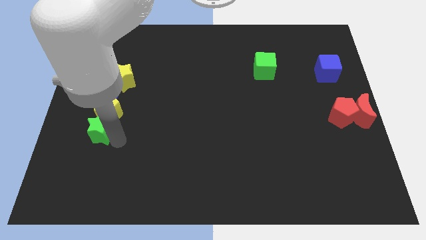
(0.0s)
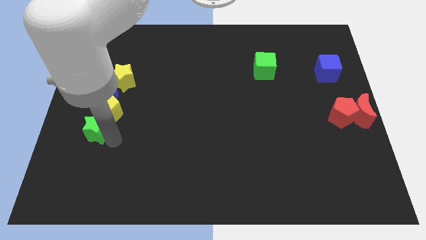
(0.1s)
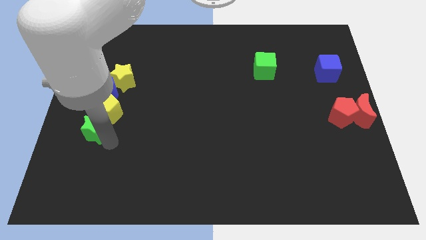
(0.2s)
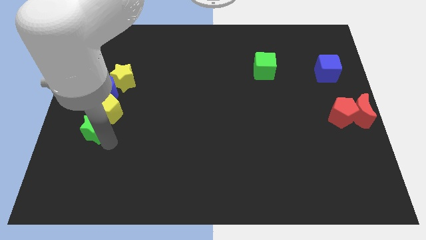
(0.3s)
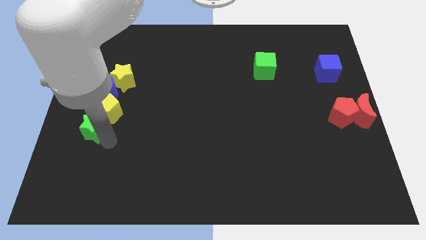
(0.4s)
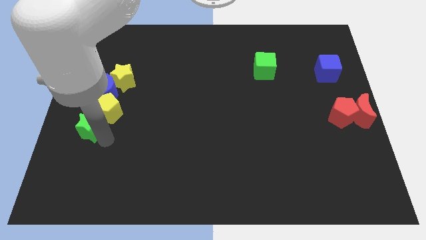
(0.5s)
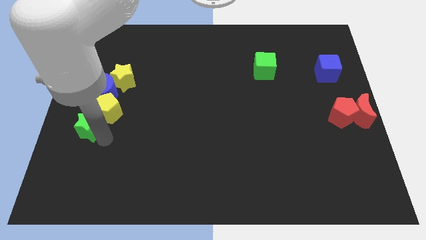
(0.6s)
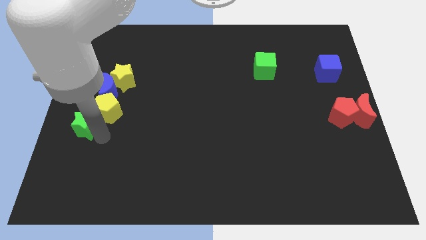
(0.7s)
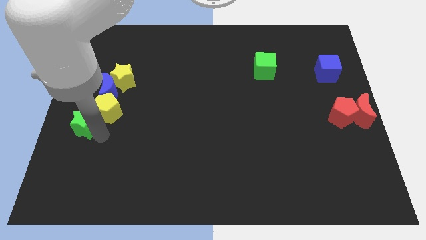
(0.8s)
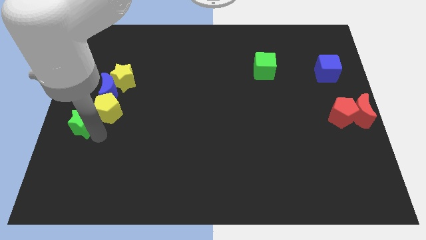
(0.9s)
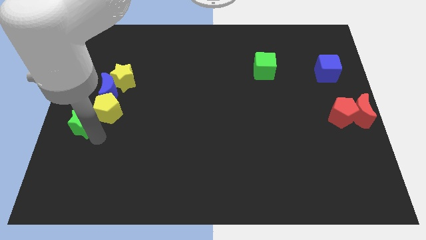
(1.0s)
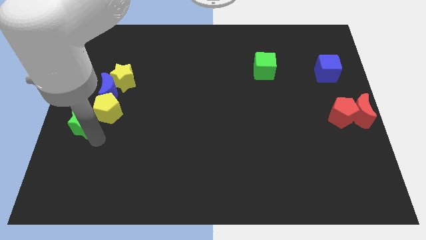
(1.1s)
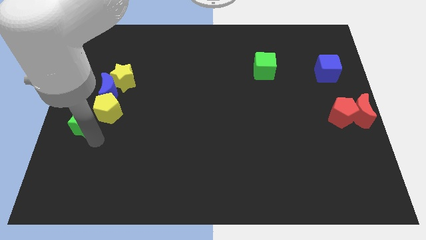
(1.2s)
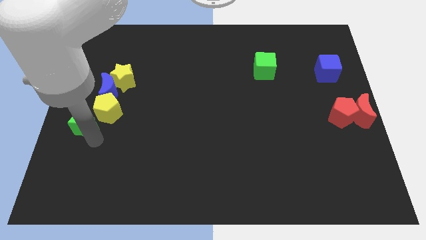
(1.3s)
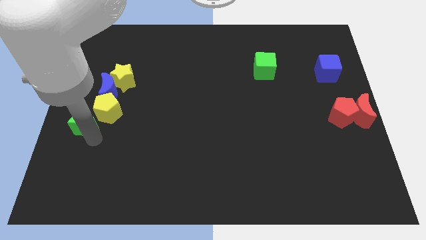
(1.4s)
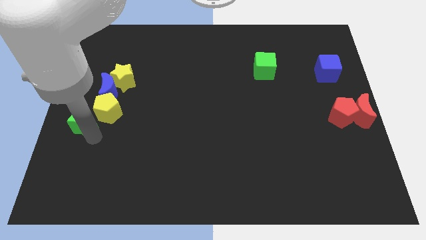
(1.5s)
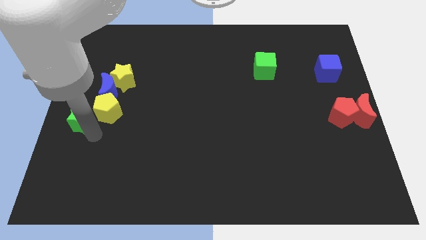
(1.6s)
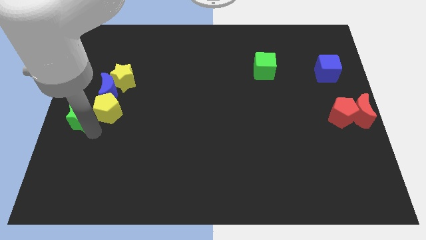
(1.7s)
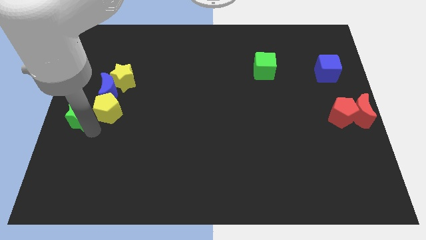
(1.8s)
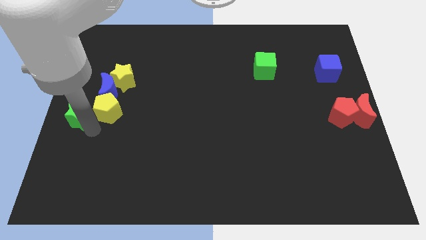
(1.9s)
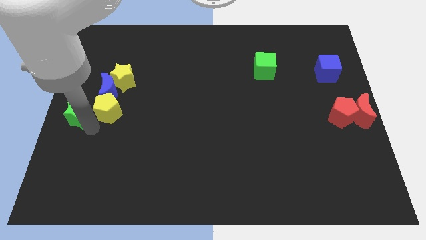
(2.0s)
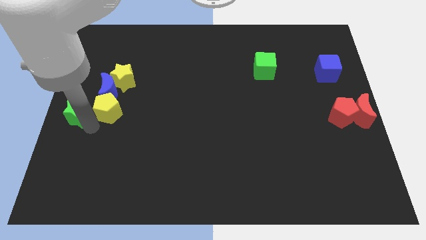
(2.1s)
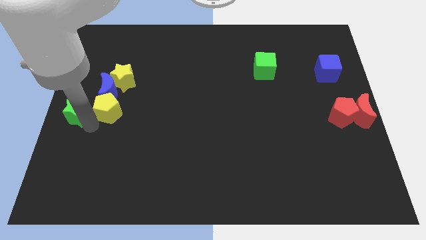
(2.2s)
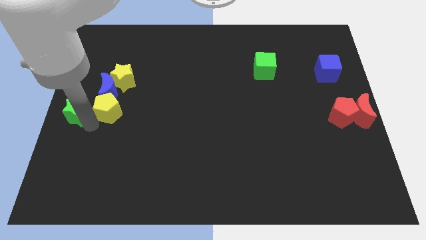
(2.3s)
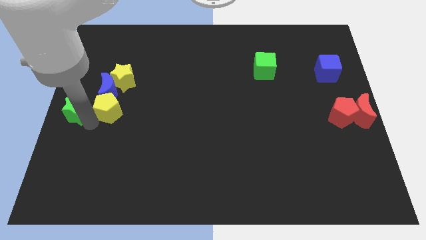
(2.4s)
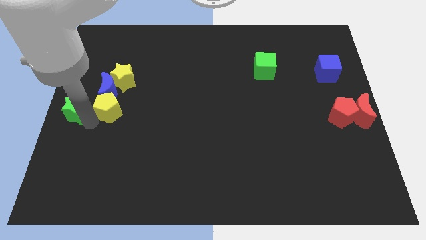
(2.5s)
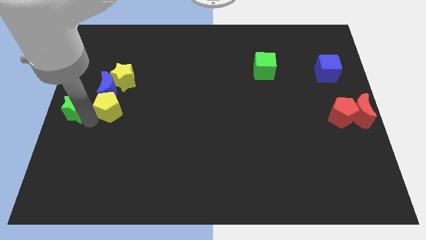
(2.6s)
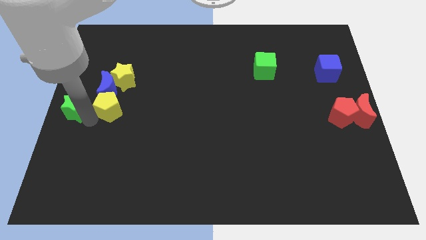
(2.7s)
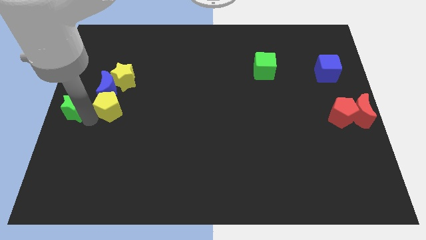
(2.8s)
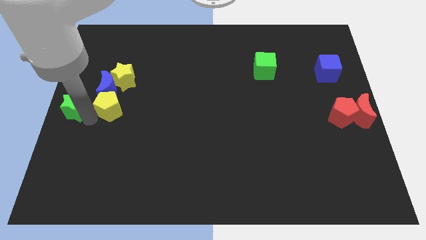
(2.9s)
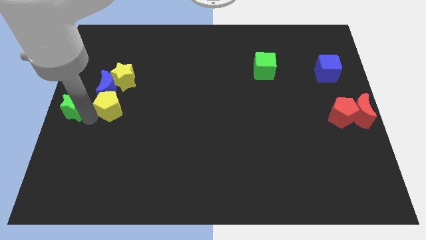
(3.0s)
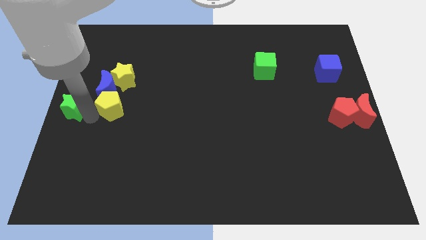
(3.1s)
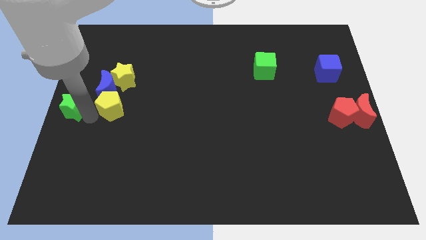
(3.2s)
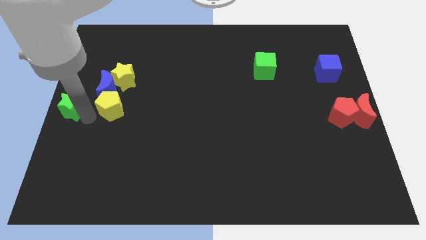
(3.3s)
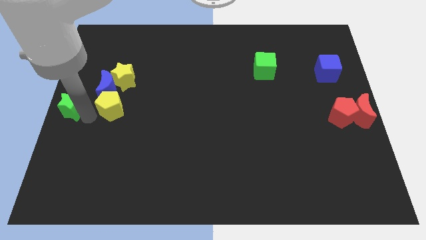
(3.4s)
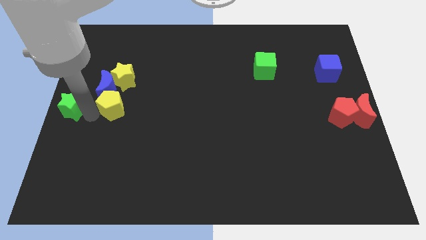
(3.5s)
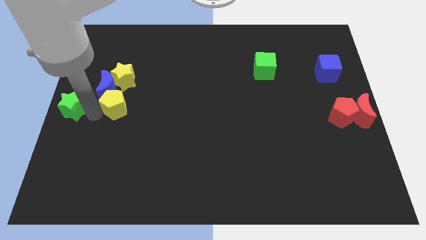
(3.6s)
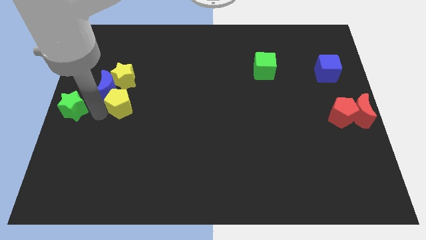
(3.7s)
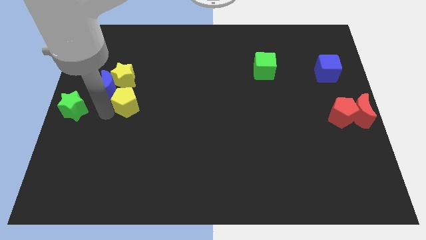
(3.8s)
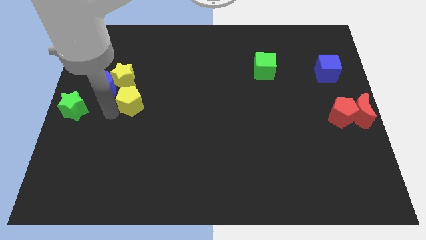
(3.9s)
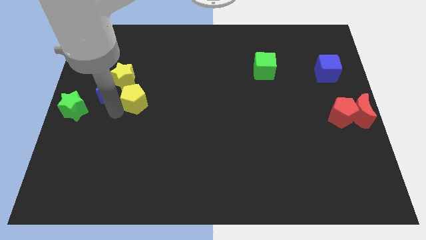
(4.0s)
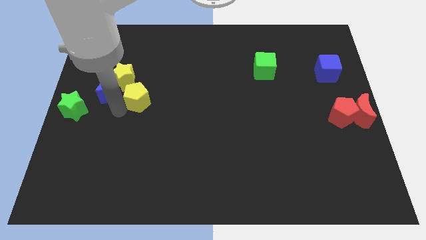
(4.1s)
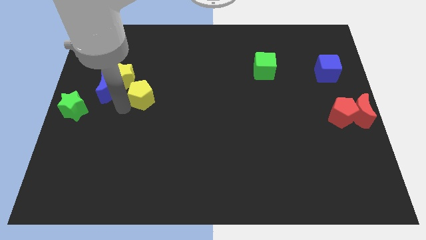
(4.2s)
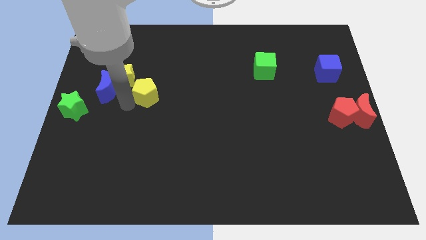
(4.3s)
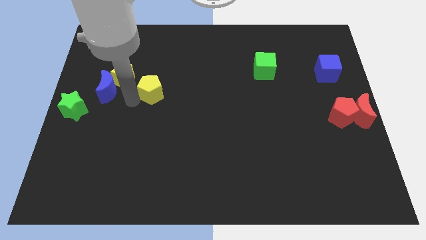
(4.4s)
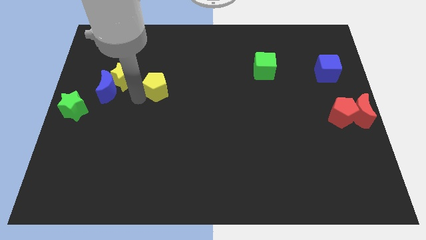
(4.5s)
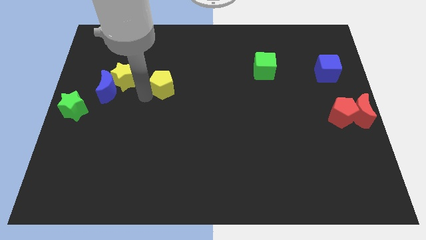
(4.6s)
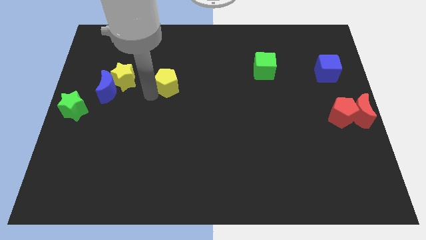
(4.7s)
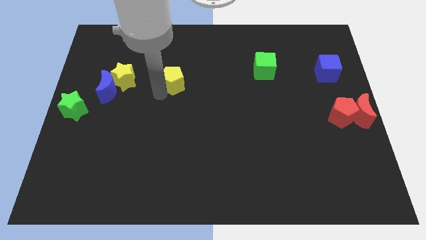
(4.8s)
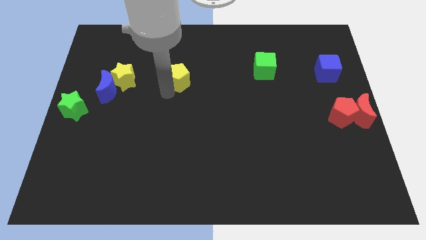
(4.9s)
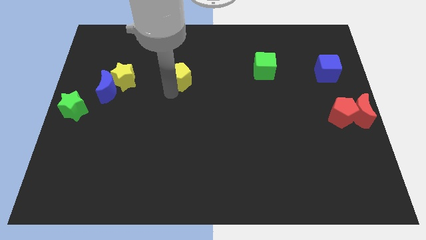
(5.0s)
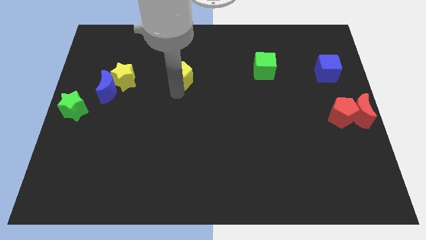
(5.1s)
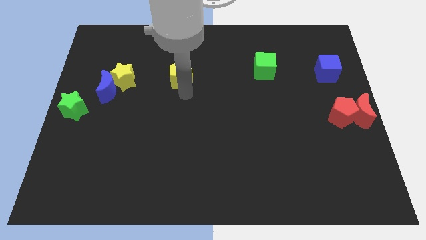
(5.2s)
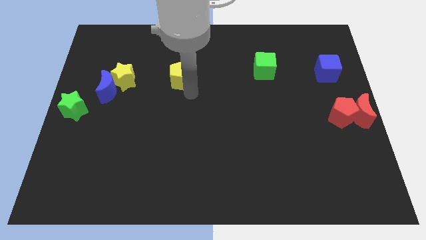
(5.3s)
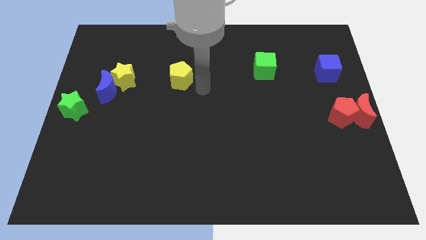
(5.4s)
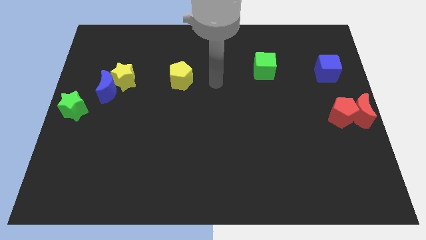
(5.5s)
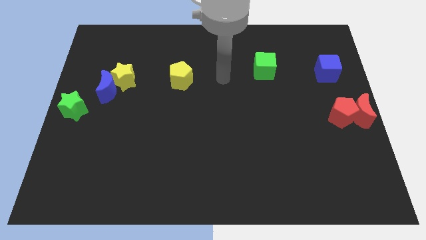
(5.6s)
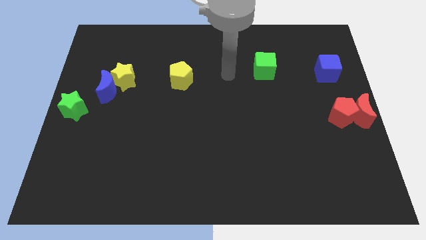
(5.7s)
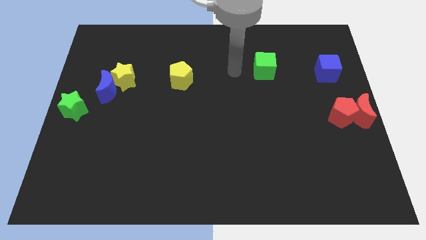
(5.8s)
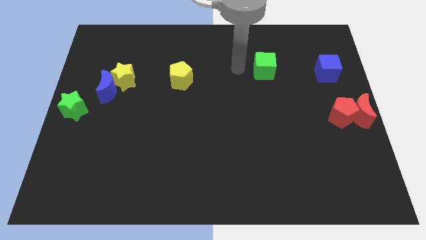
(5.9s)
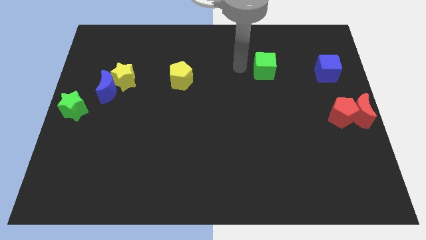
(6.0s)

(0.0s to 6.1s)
place yellow pentagon to the right of yellow star

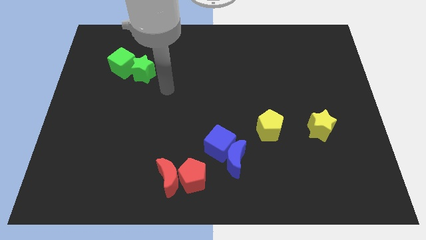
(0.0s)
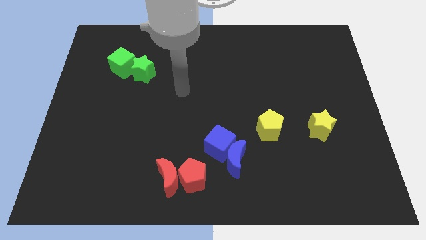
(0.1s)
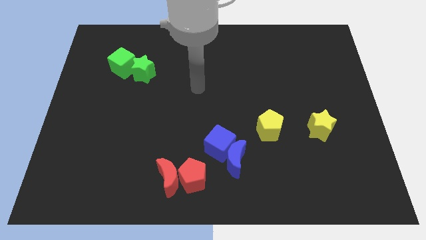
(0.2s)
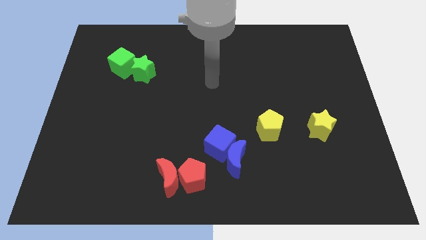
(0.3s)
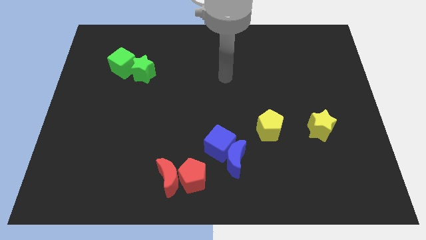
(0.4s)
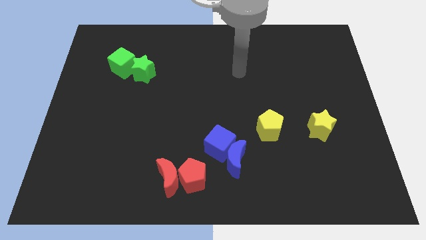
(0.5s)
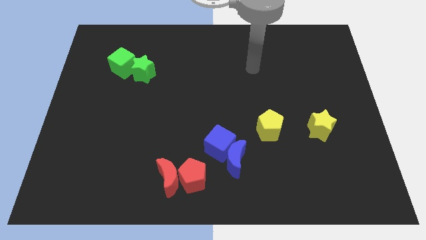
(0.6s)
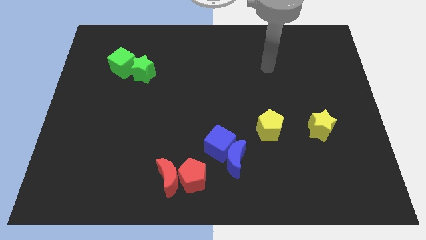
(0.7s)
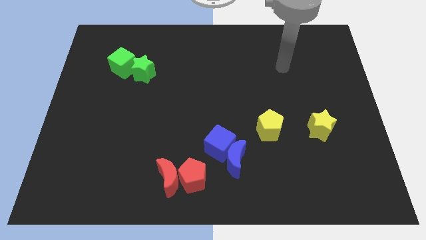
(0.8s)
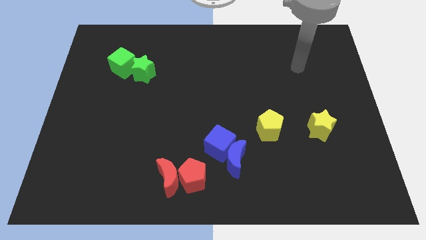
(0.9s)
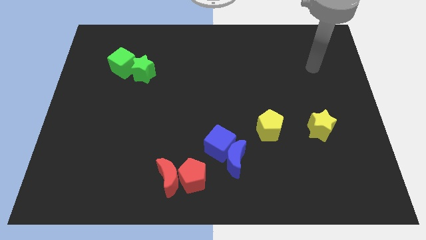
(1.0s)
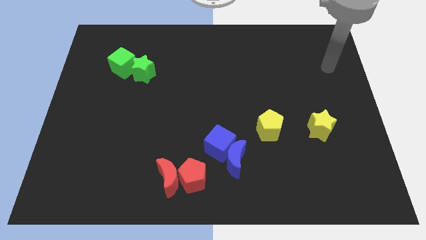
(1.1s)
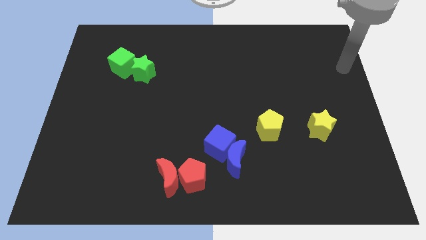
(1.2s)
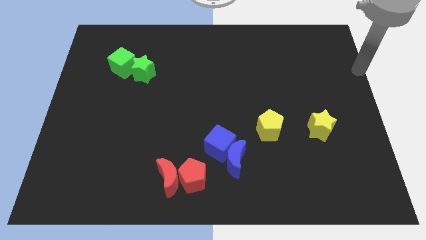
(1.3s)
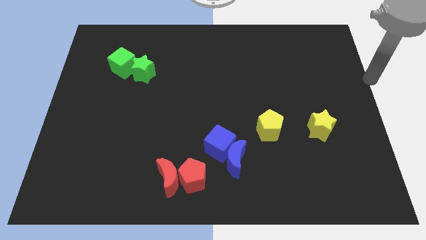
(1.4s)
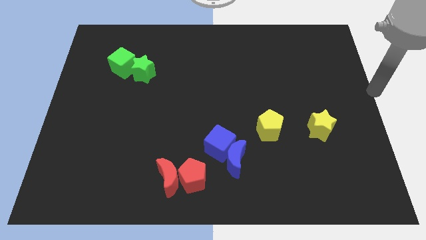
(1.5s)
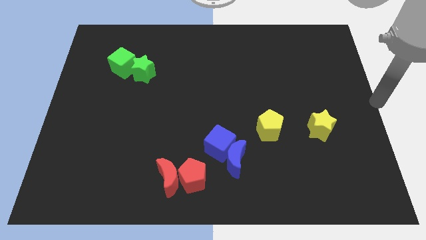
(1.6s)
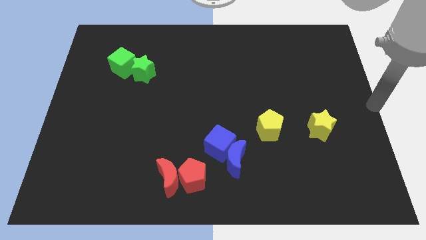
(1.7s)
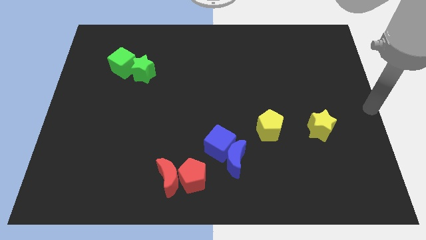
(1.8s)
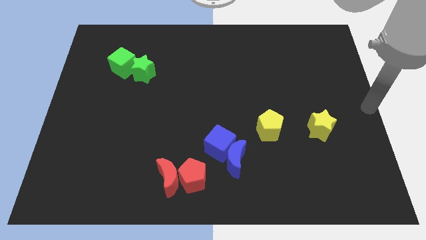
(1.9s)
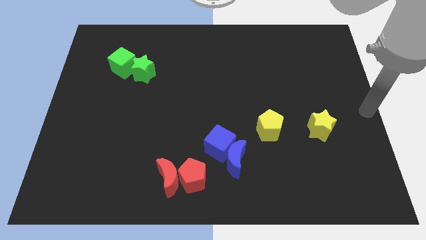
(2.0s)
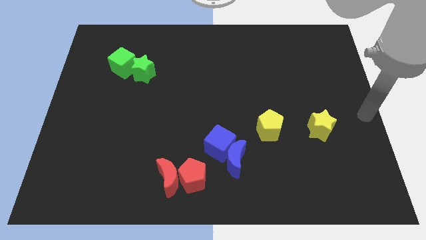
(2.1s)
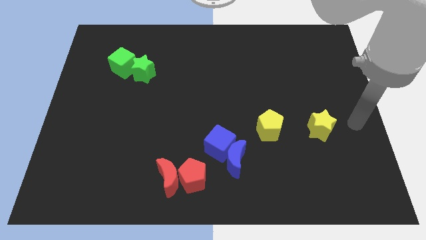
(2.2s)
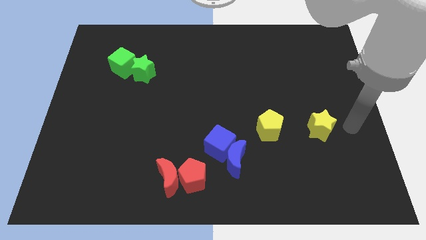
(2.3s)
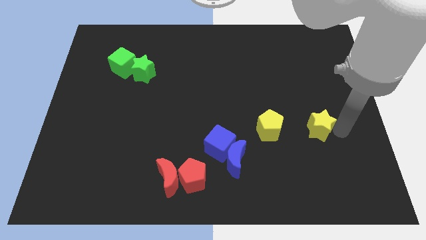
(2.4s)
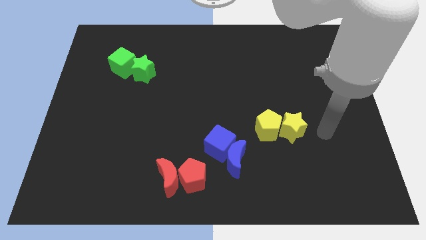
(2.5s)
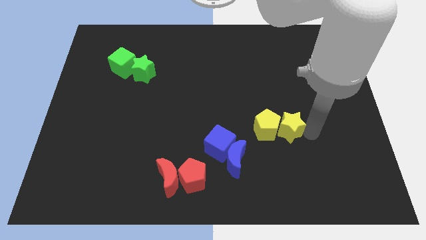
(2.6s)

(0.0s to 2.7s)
push the yellow star right to the yellow pentagon
